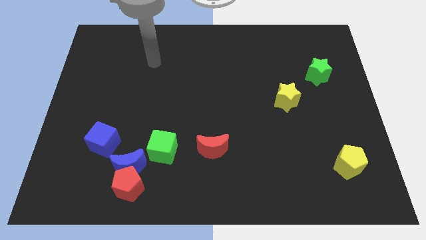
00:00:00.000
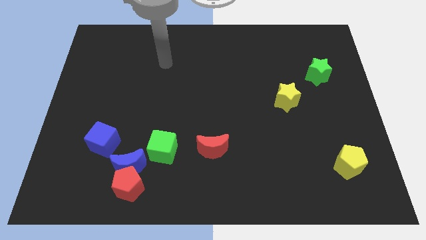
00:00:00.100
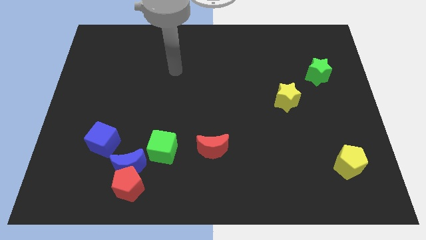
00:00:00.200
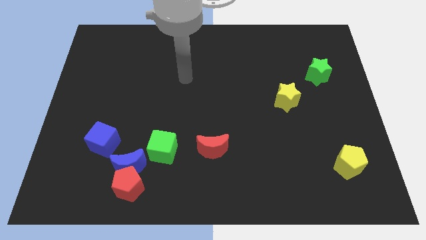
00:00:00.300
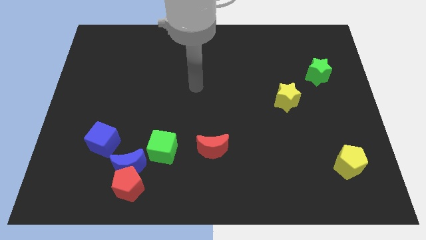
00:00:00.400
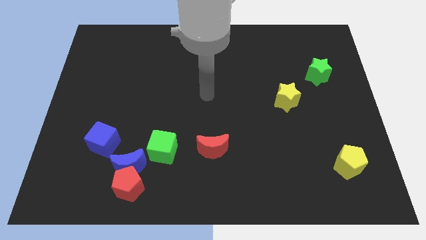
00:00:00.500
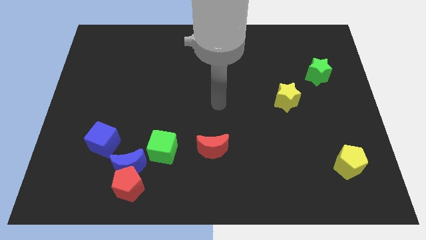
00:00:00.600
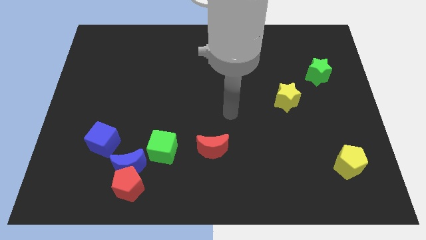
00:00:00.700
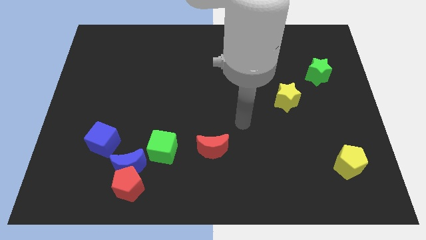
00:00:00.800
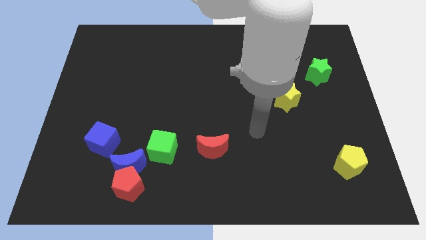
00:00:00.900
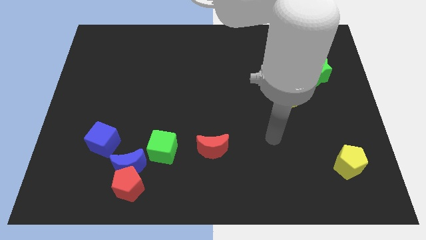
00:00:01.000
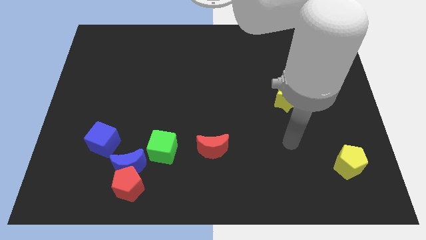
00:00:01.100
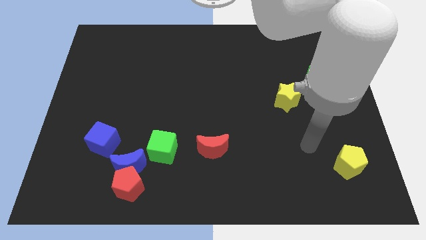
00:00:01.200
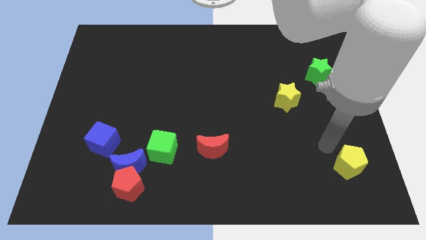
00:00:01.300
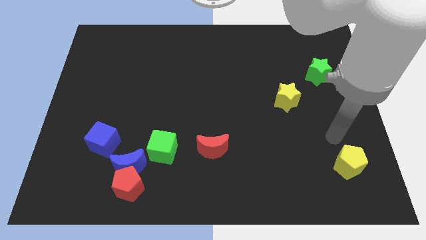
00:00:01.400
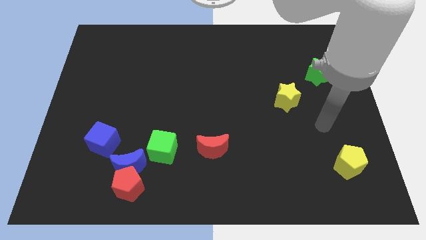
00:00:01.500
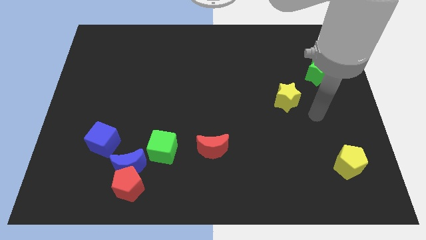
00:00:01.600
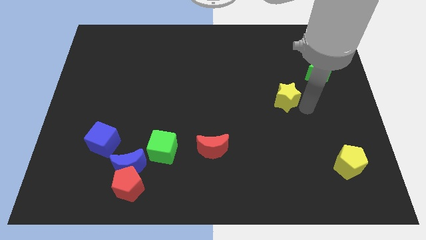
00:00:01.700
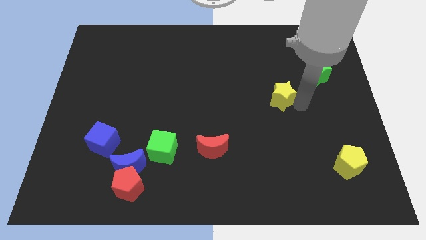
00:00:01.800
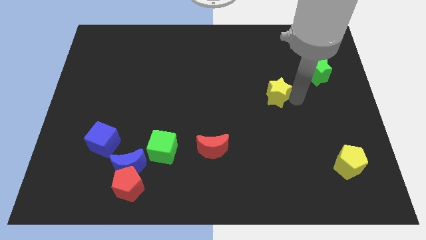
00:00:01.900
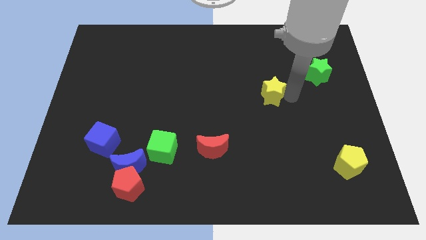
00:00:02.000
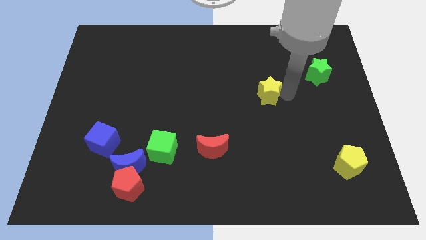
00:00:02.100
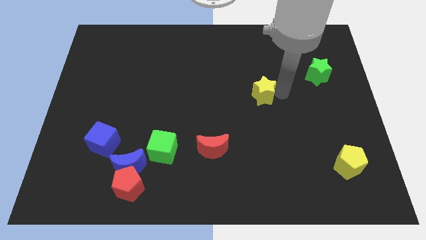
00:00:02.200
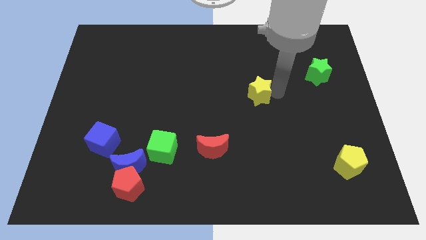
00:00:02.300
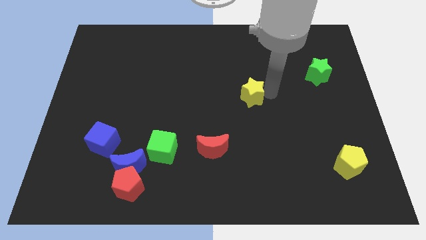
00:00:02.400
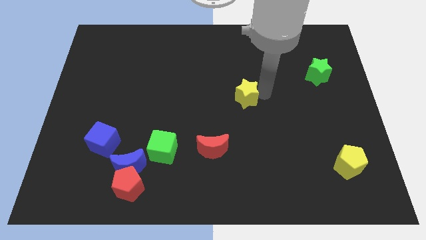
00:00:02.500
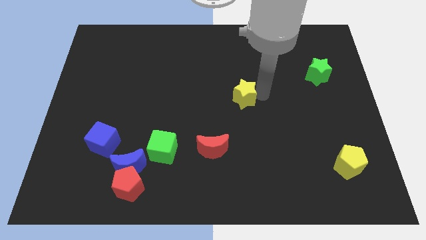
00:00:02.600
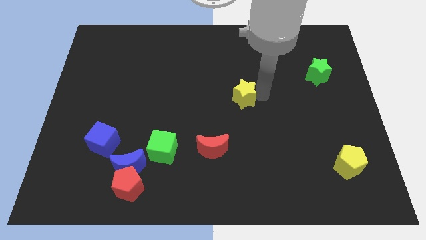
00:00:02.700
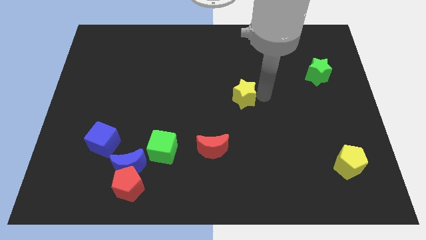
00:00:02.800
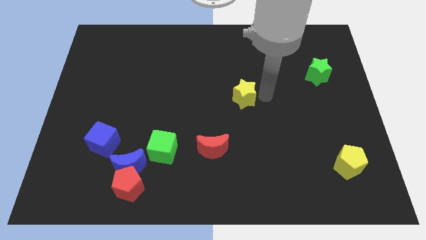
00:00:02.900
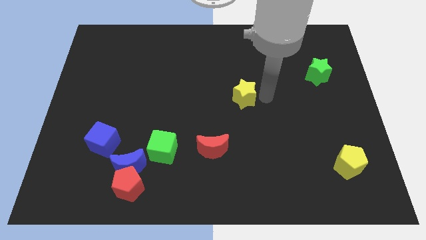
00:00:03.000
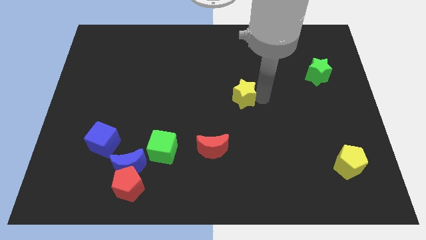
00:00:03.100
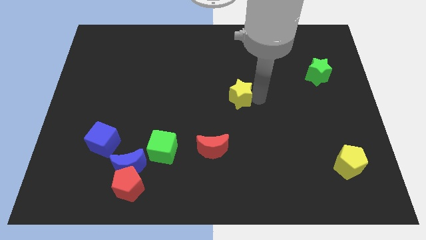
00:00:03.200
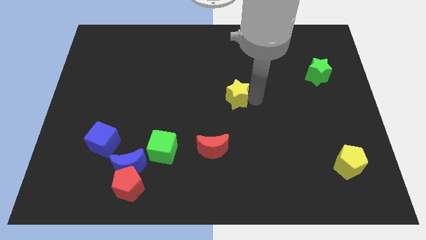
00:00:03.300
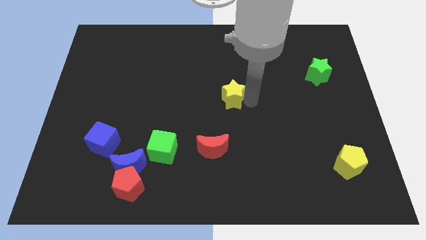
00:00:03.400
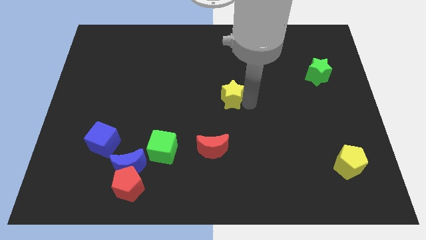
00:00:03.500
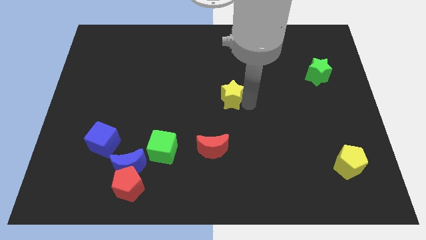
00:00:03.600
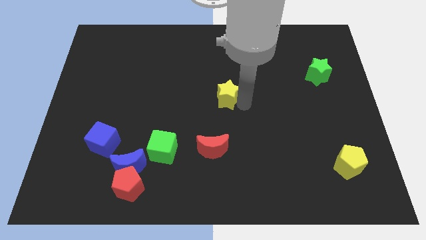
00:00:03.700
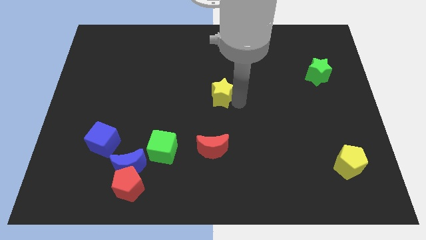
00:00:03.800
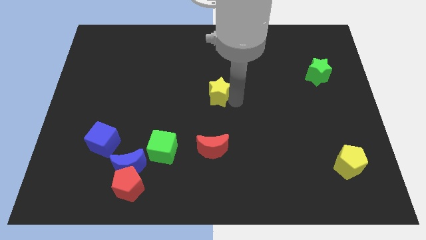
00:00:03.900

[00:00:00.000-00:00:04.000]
push the yellow star towards the center of the board

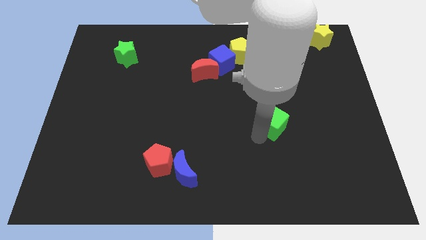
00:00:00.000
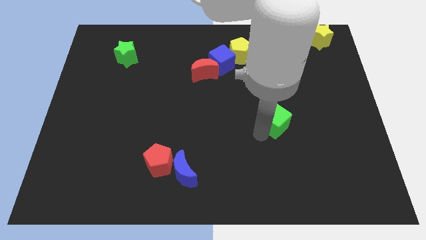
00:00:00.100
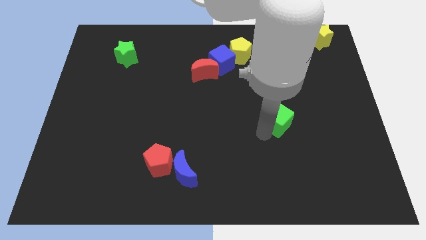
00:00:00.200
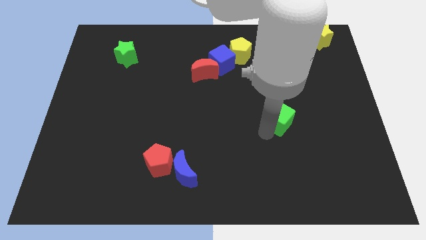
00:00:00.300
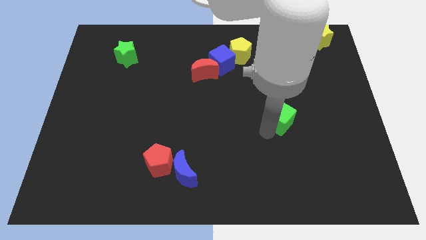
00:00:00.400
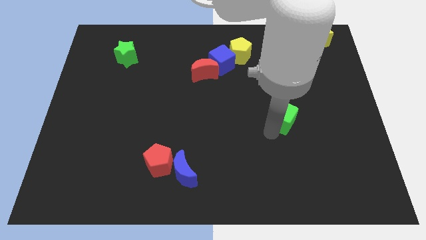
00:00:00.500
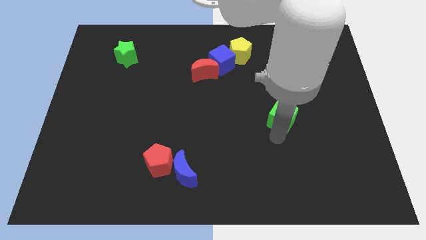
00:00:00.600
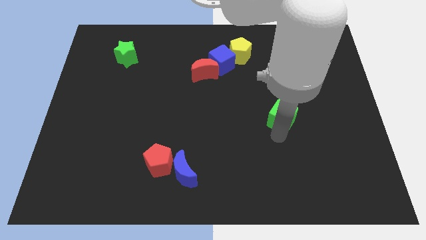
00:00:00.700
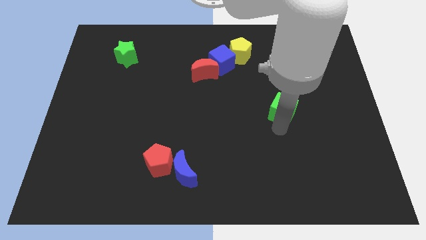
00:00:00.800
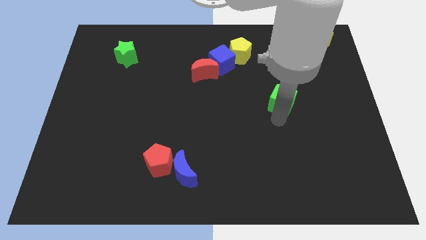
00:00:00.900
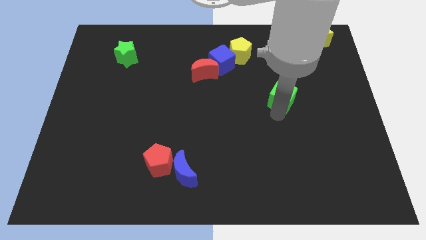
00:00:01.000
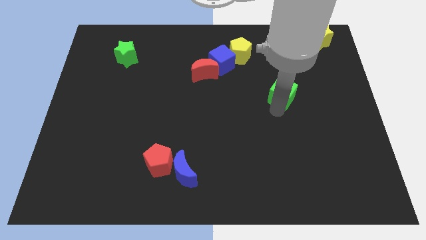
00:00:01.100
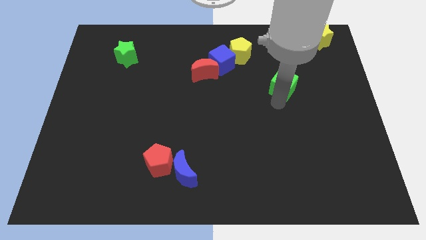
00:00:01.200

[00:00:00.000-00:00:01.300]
move the green cube diagonal above the blue moon

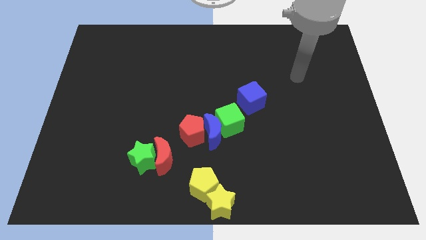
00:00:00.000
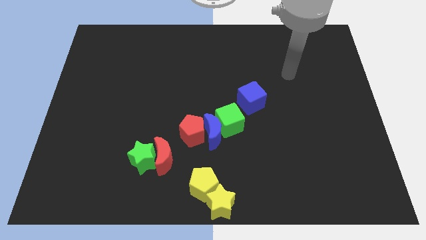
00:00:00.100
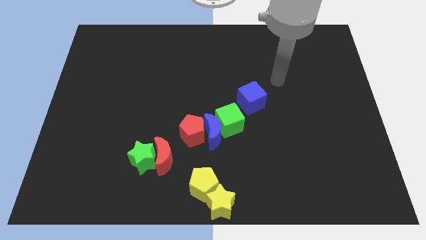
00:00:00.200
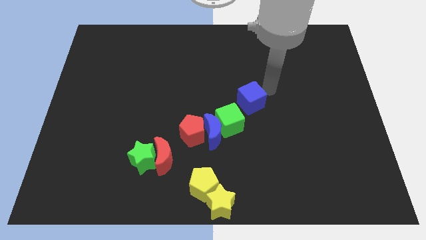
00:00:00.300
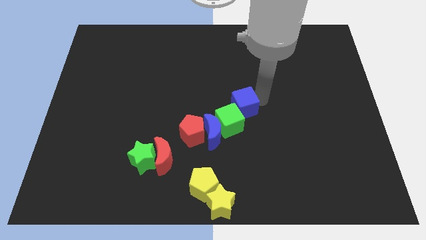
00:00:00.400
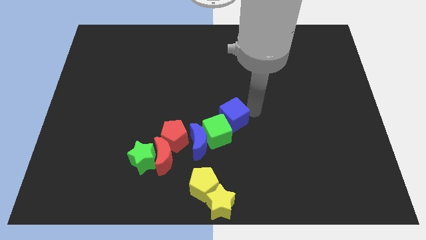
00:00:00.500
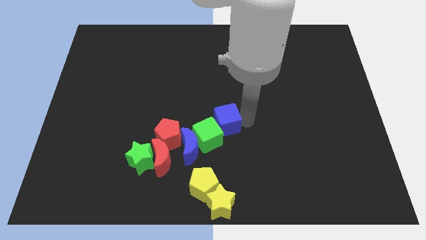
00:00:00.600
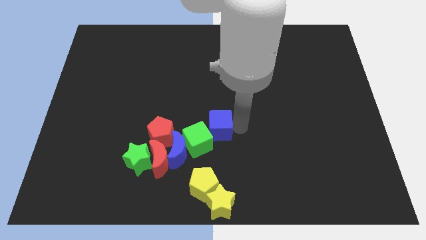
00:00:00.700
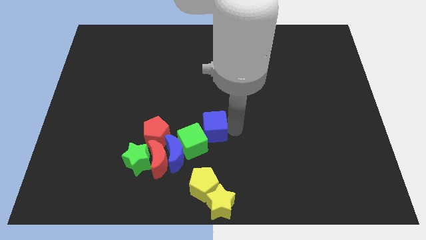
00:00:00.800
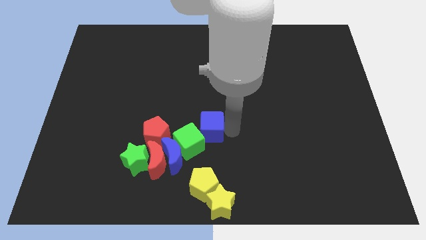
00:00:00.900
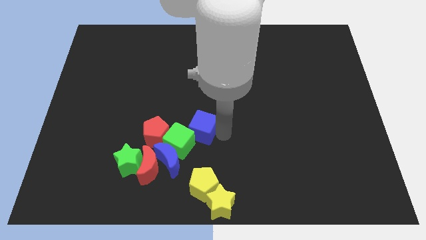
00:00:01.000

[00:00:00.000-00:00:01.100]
push blue cube into green cube

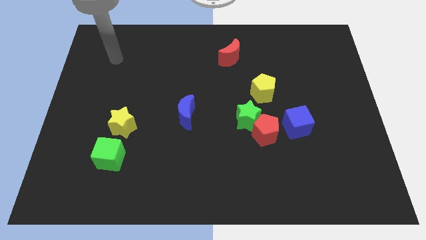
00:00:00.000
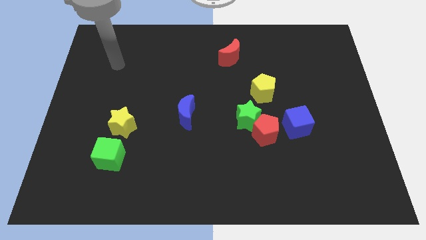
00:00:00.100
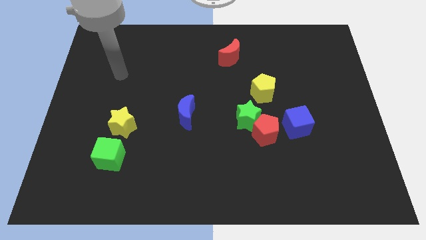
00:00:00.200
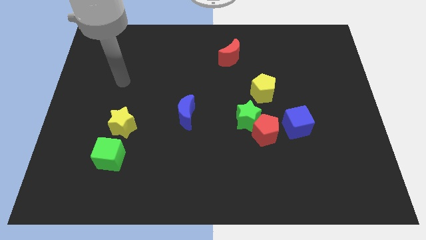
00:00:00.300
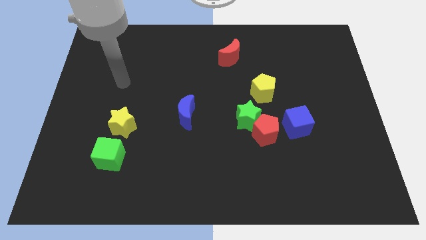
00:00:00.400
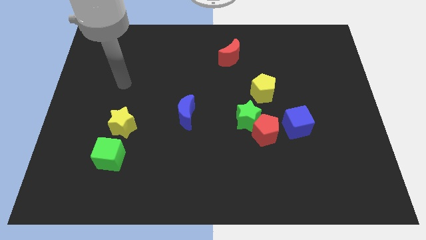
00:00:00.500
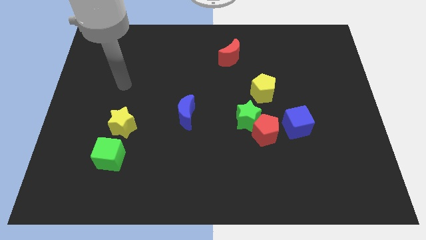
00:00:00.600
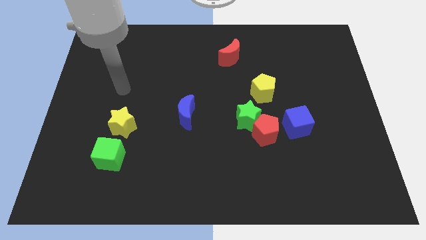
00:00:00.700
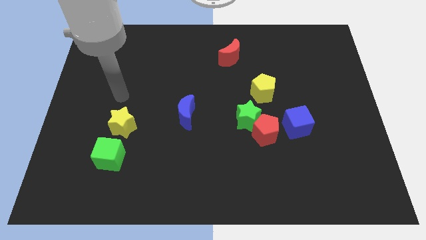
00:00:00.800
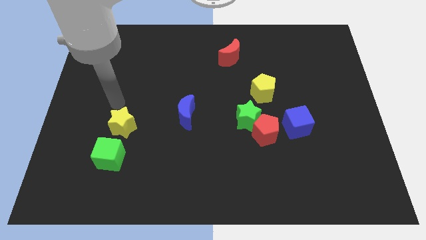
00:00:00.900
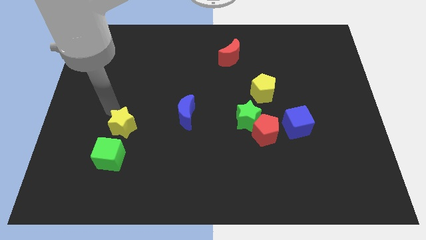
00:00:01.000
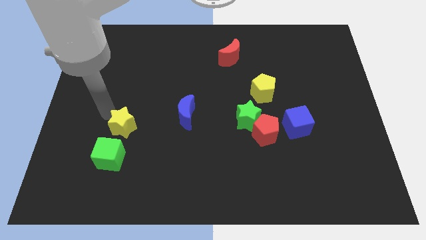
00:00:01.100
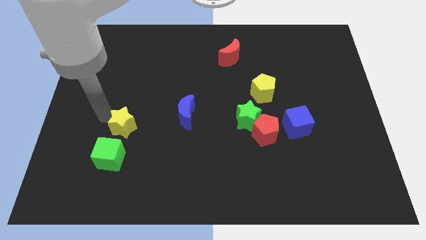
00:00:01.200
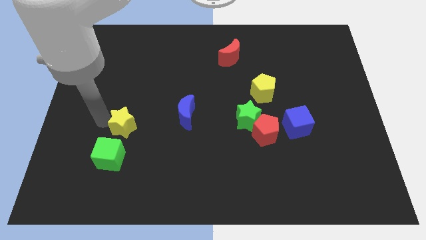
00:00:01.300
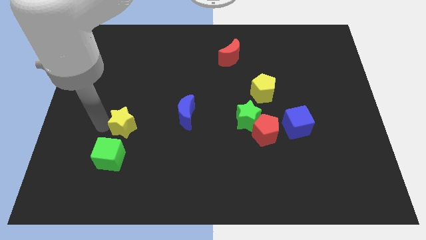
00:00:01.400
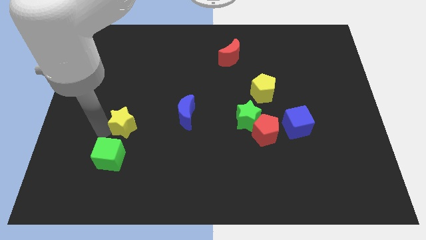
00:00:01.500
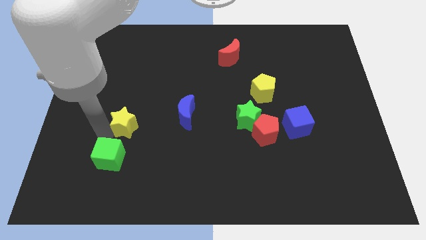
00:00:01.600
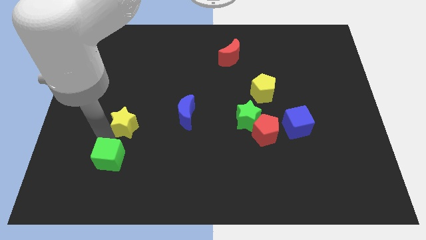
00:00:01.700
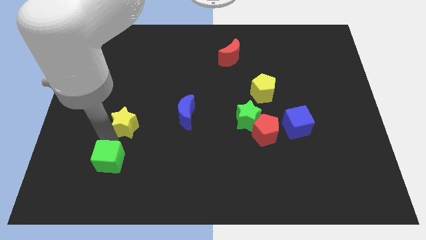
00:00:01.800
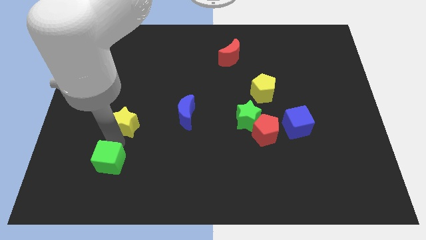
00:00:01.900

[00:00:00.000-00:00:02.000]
place your arm in between the yellow star and green cube

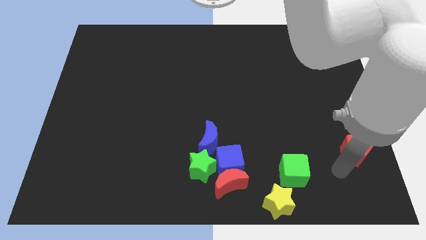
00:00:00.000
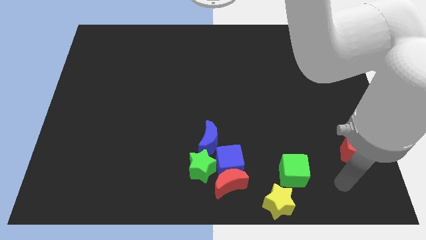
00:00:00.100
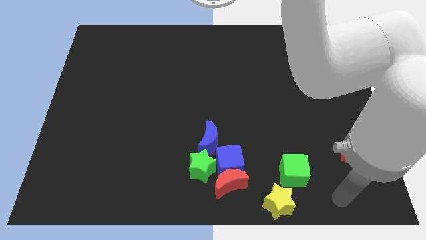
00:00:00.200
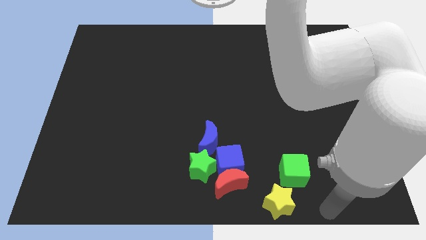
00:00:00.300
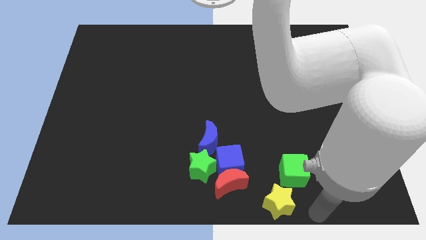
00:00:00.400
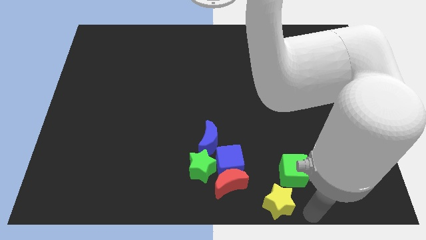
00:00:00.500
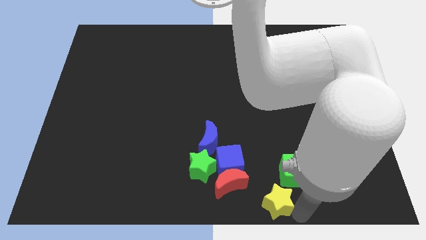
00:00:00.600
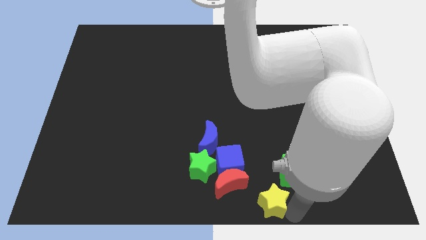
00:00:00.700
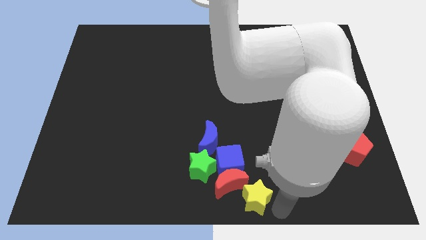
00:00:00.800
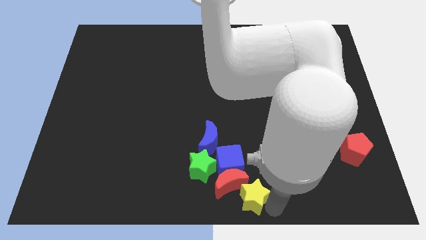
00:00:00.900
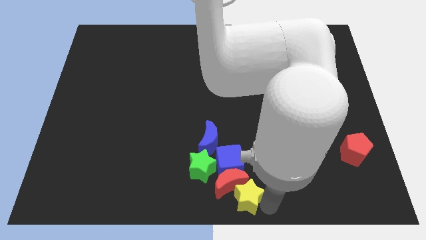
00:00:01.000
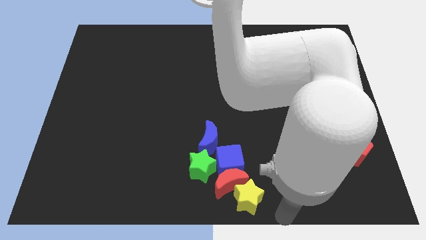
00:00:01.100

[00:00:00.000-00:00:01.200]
move the yellow star to the bottom of the red moon
